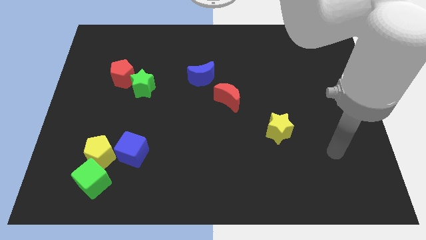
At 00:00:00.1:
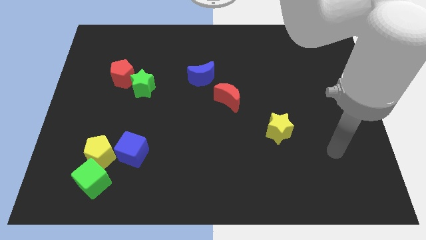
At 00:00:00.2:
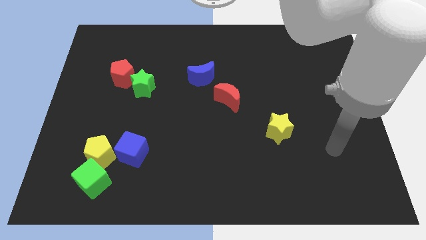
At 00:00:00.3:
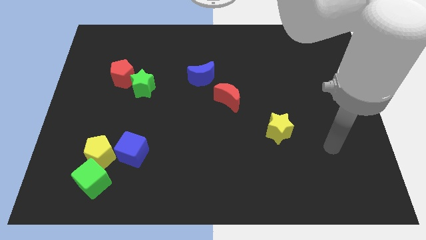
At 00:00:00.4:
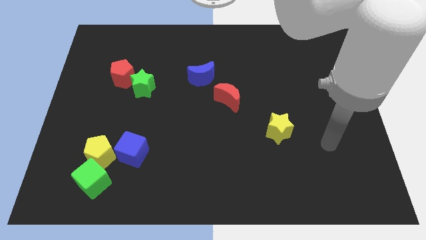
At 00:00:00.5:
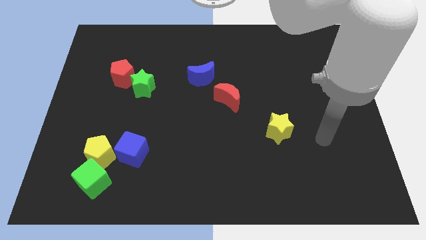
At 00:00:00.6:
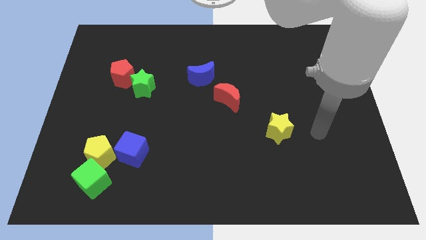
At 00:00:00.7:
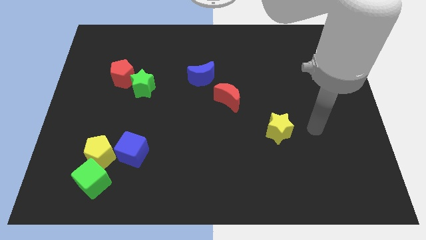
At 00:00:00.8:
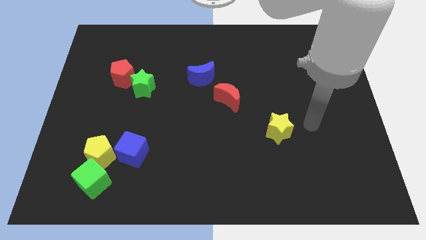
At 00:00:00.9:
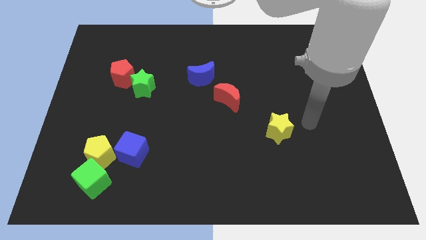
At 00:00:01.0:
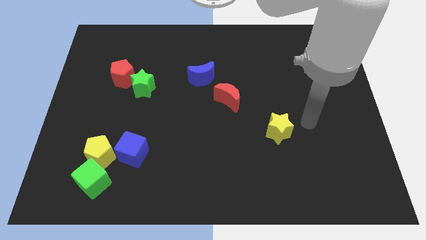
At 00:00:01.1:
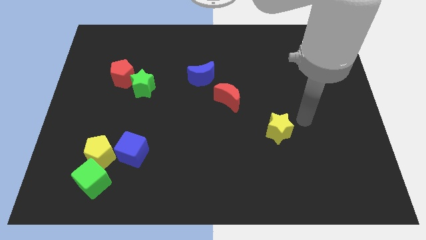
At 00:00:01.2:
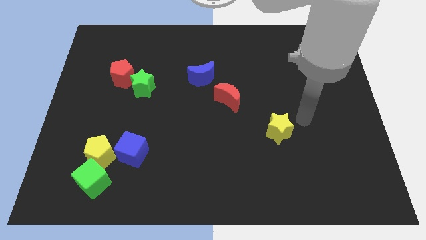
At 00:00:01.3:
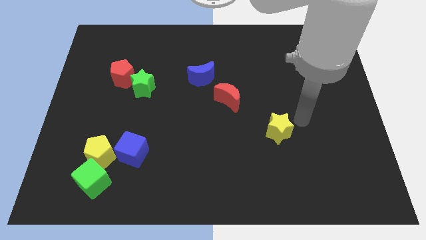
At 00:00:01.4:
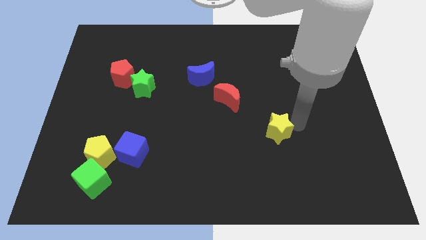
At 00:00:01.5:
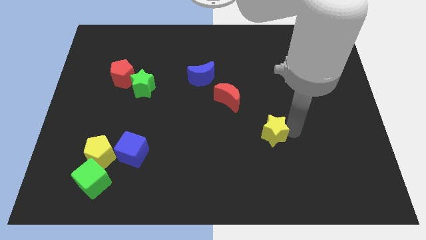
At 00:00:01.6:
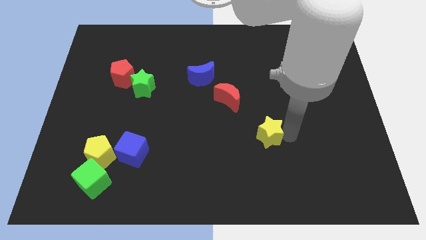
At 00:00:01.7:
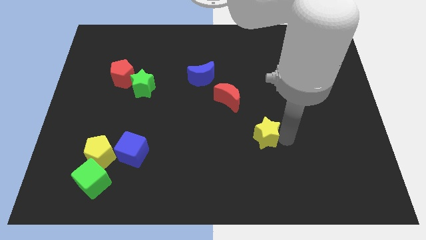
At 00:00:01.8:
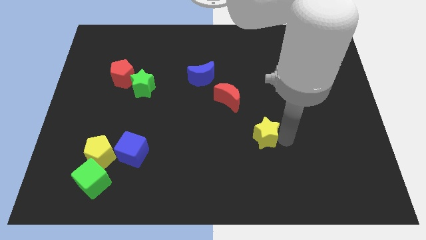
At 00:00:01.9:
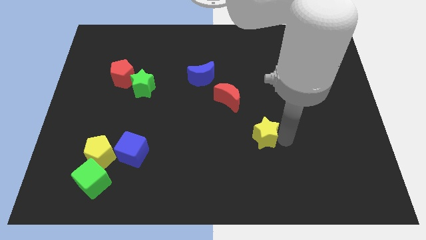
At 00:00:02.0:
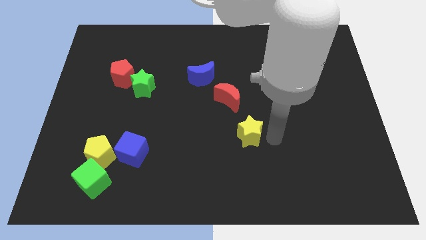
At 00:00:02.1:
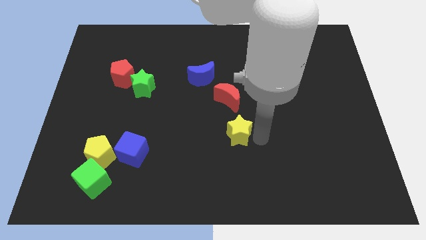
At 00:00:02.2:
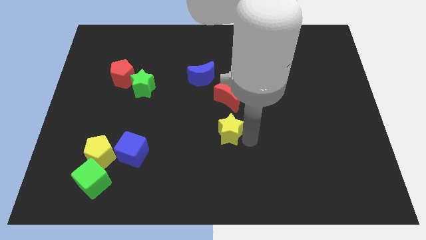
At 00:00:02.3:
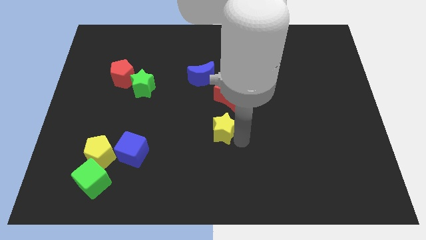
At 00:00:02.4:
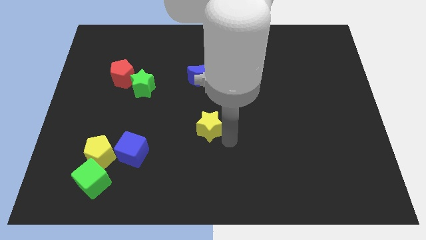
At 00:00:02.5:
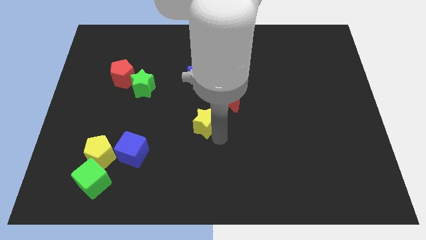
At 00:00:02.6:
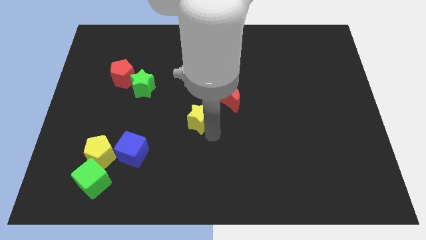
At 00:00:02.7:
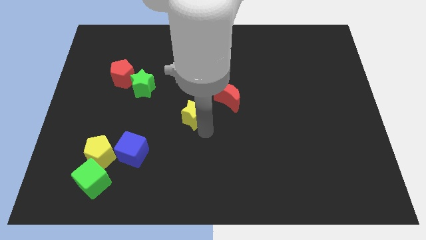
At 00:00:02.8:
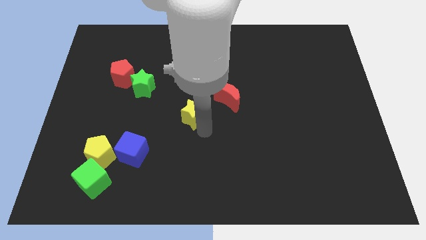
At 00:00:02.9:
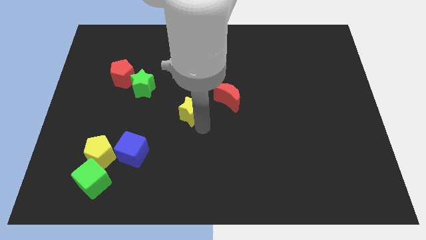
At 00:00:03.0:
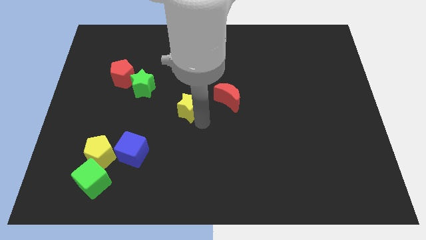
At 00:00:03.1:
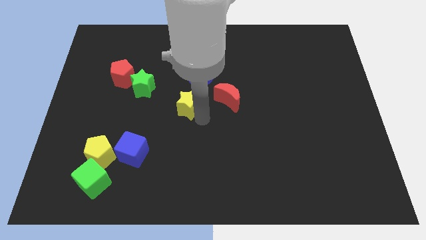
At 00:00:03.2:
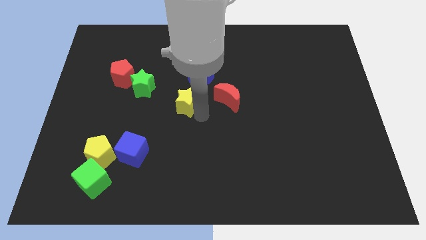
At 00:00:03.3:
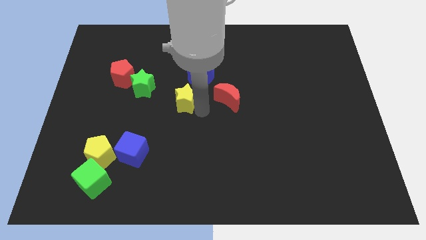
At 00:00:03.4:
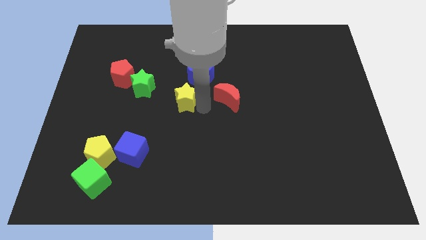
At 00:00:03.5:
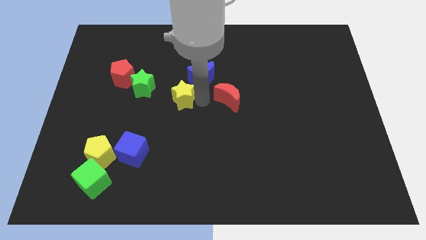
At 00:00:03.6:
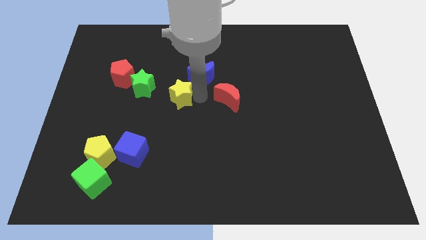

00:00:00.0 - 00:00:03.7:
move the yellow star to the left side of the red moon

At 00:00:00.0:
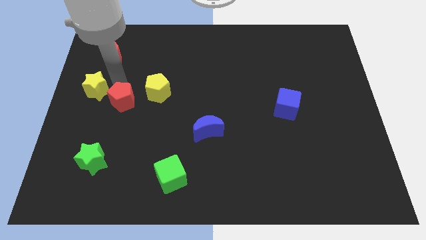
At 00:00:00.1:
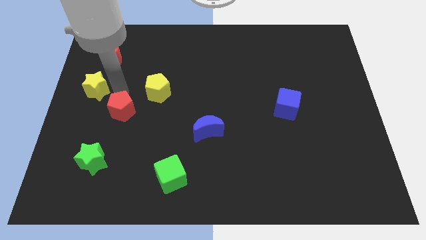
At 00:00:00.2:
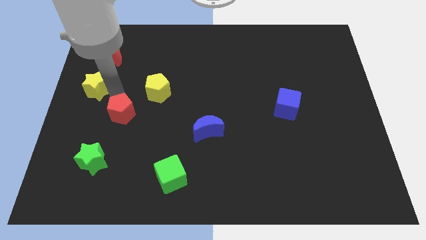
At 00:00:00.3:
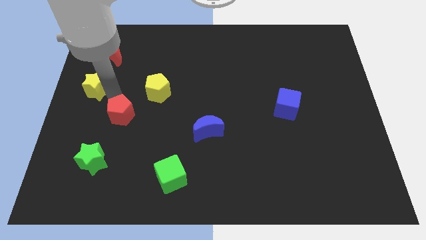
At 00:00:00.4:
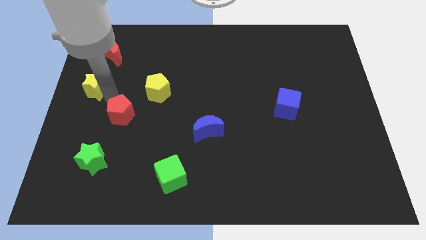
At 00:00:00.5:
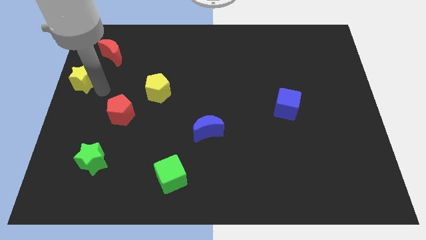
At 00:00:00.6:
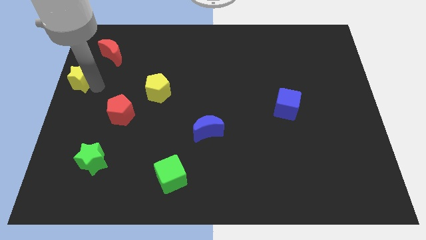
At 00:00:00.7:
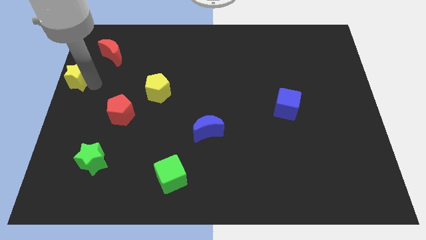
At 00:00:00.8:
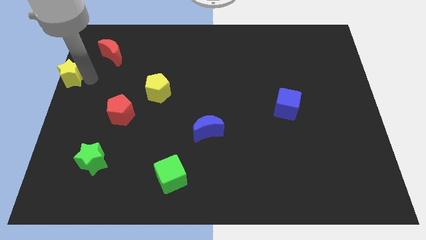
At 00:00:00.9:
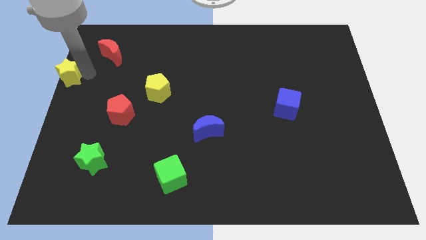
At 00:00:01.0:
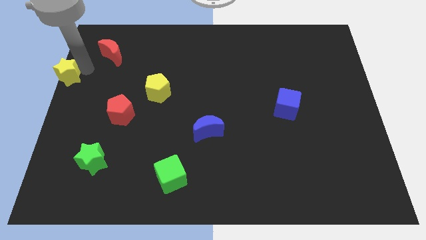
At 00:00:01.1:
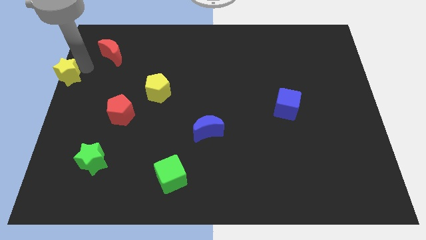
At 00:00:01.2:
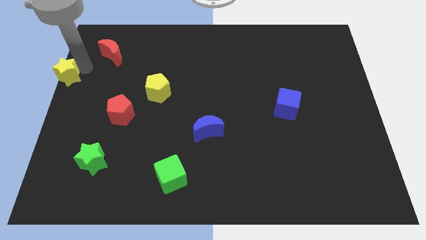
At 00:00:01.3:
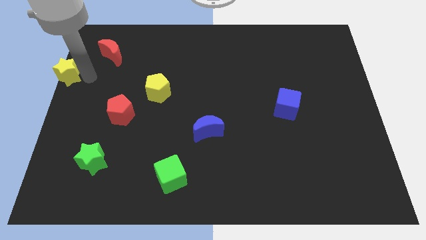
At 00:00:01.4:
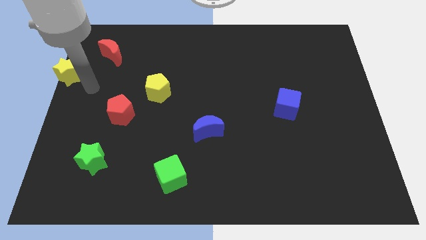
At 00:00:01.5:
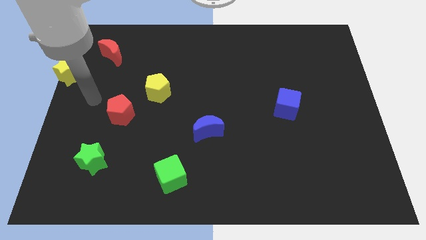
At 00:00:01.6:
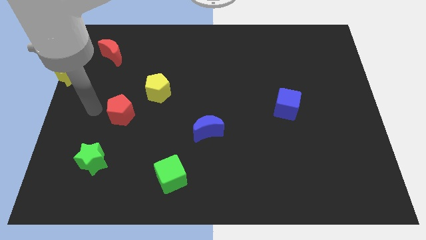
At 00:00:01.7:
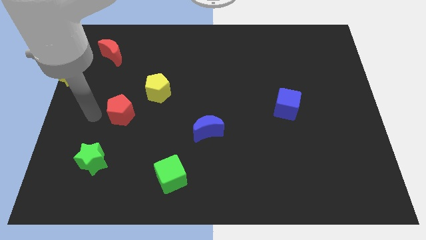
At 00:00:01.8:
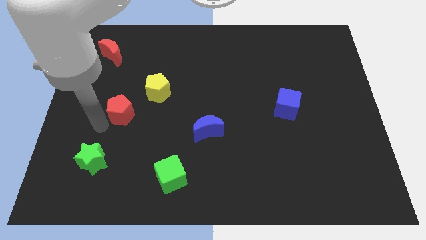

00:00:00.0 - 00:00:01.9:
slightly push the red pentagon downwards of the board

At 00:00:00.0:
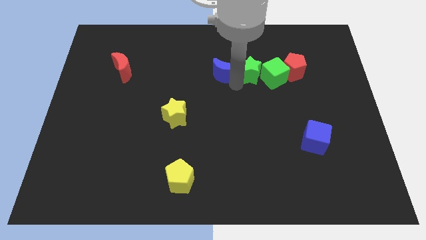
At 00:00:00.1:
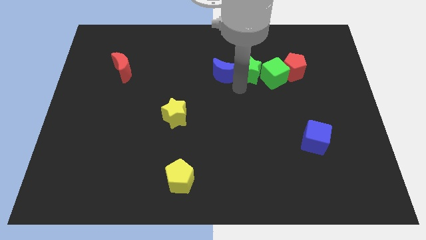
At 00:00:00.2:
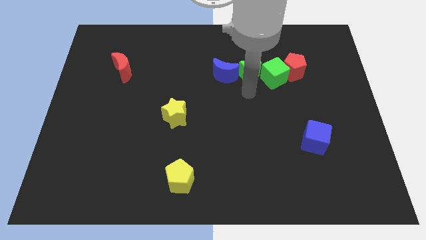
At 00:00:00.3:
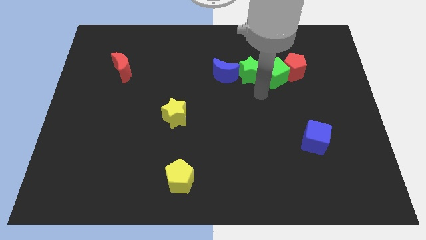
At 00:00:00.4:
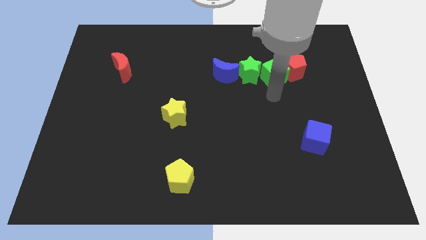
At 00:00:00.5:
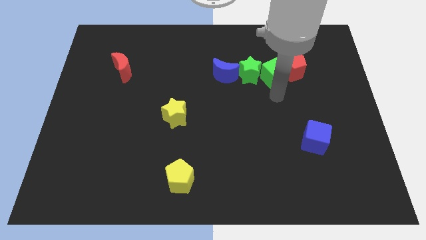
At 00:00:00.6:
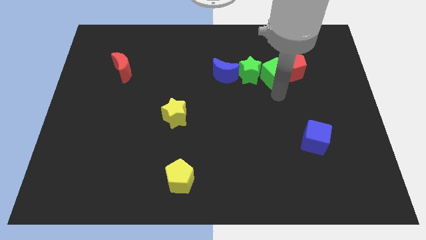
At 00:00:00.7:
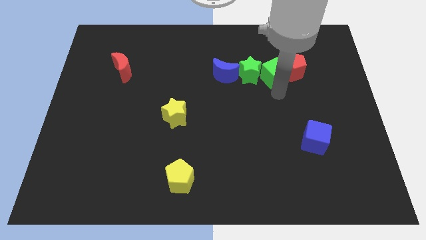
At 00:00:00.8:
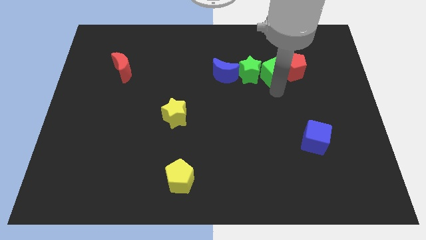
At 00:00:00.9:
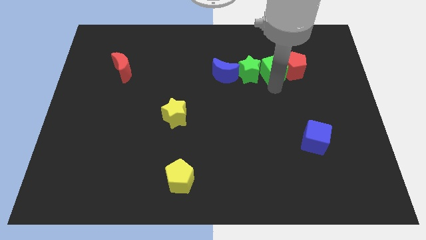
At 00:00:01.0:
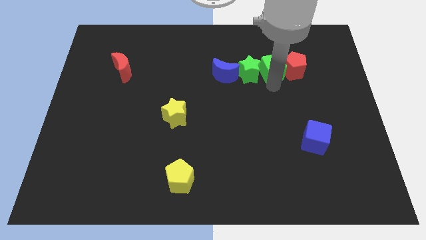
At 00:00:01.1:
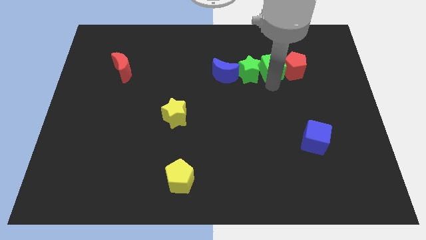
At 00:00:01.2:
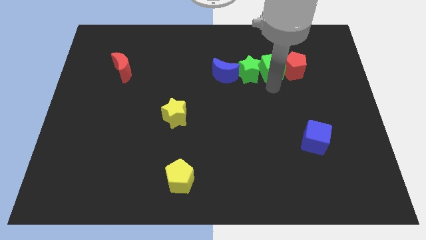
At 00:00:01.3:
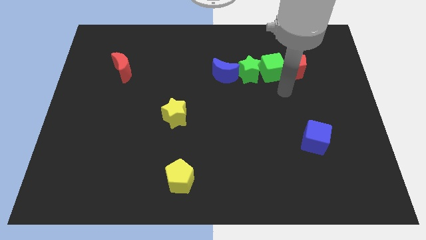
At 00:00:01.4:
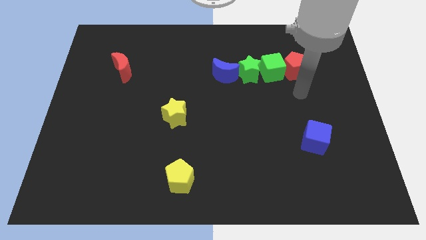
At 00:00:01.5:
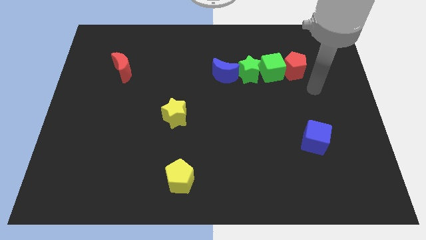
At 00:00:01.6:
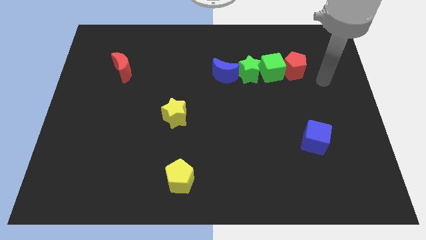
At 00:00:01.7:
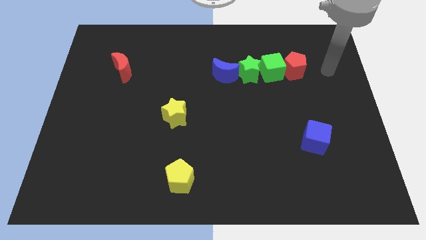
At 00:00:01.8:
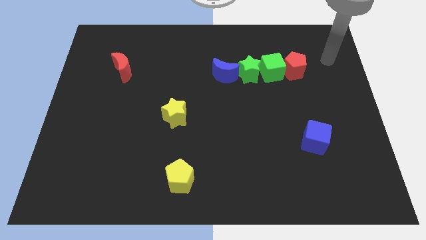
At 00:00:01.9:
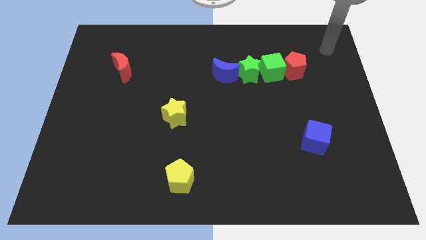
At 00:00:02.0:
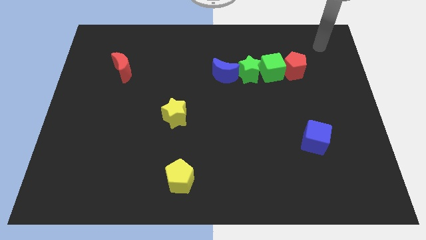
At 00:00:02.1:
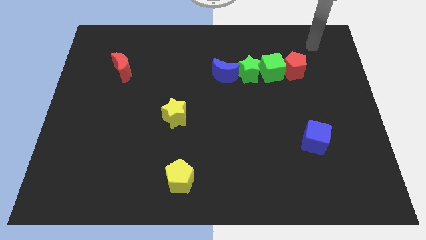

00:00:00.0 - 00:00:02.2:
adjust the green cube and form a row

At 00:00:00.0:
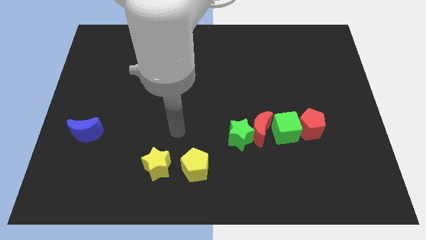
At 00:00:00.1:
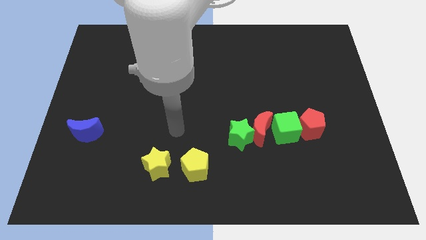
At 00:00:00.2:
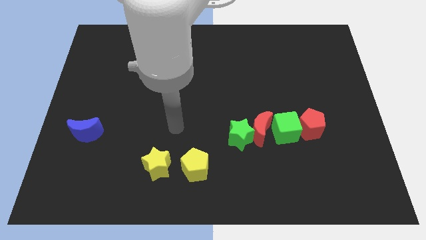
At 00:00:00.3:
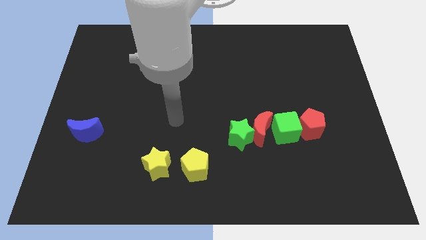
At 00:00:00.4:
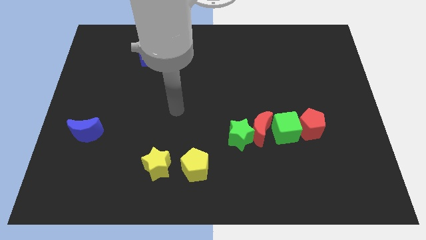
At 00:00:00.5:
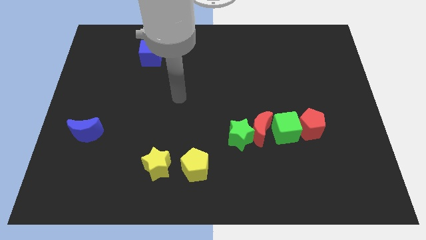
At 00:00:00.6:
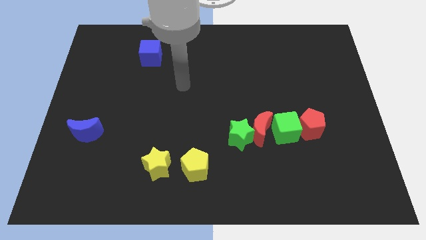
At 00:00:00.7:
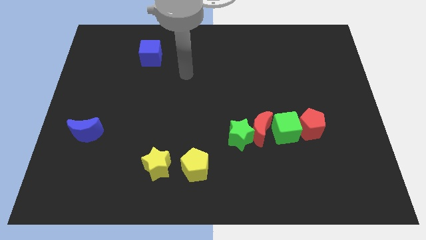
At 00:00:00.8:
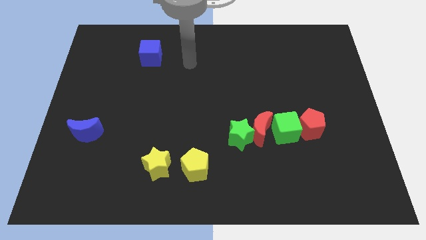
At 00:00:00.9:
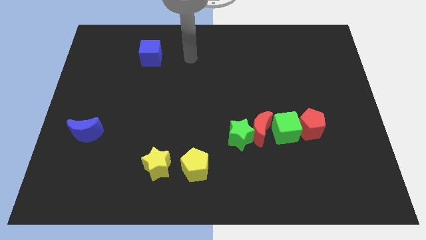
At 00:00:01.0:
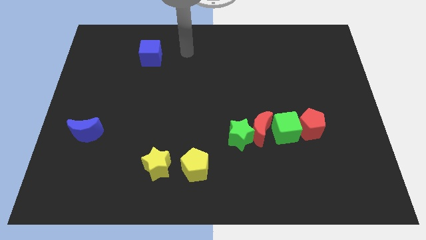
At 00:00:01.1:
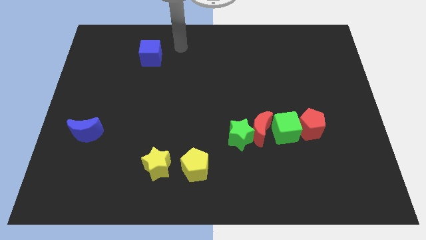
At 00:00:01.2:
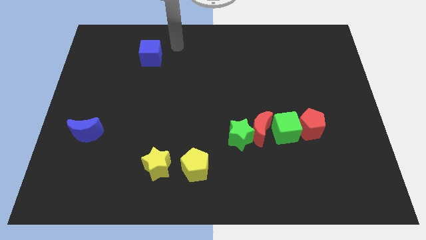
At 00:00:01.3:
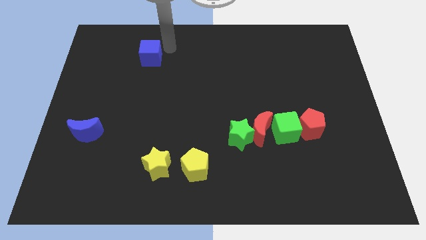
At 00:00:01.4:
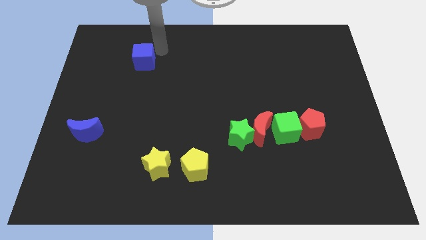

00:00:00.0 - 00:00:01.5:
place your arm to the right of blue cube
